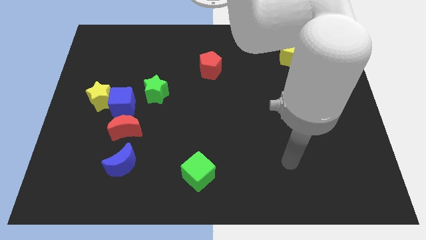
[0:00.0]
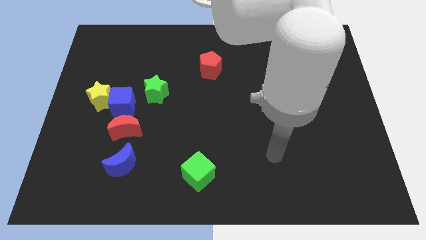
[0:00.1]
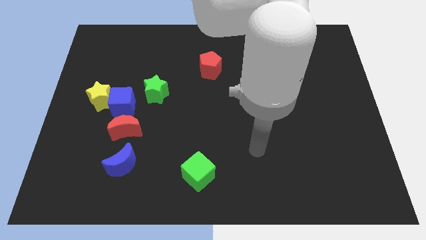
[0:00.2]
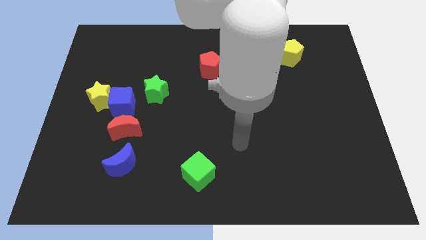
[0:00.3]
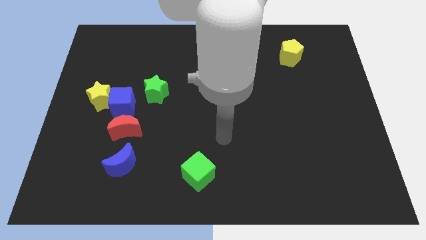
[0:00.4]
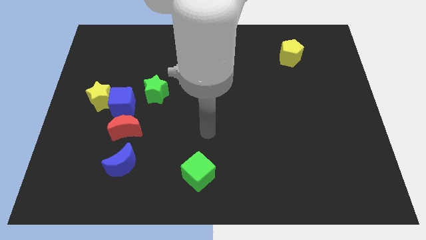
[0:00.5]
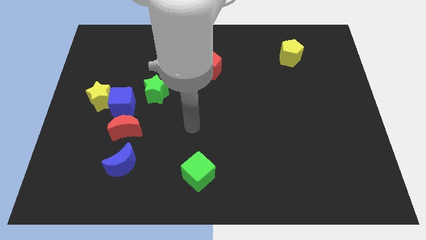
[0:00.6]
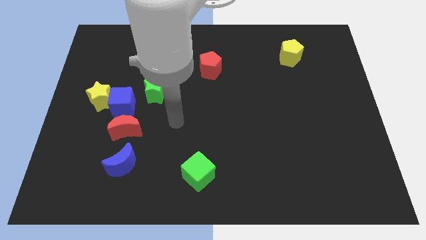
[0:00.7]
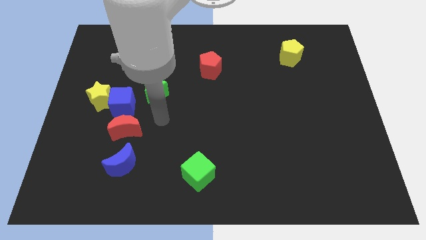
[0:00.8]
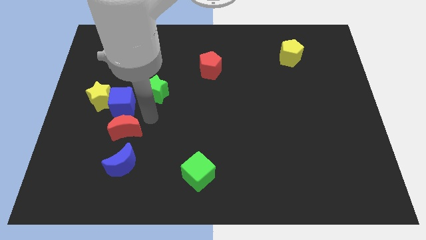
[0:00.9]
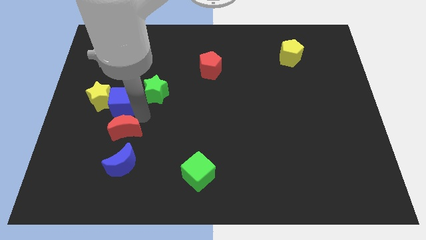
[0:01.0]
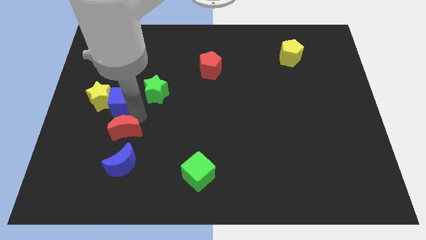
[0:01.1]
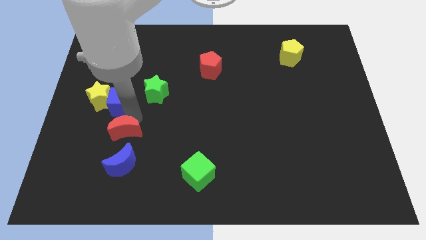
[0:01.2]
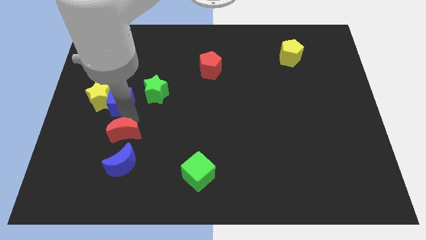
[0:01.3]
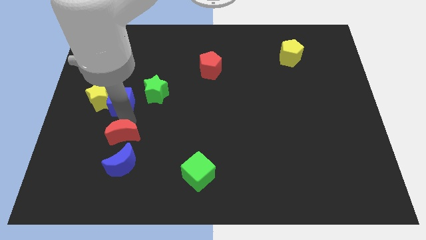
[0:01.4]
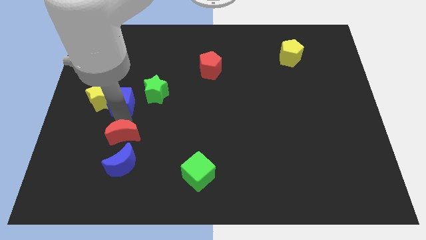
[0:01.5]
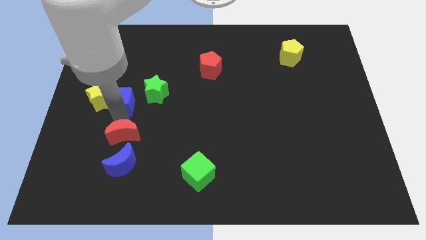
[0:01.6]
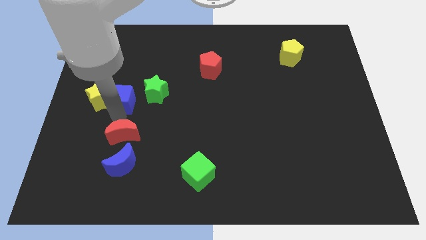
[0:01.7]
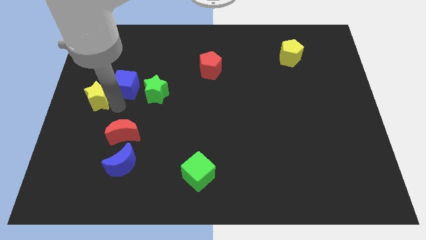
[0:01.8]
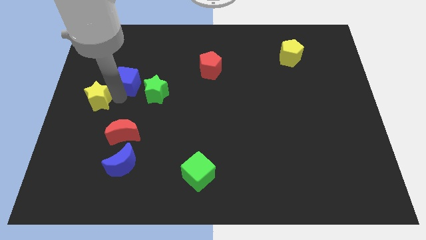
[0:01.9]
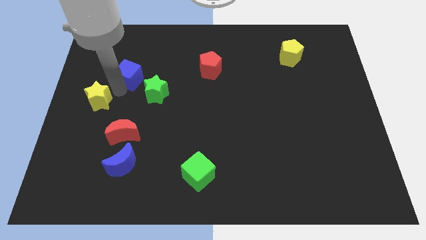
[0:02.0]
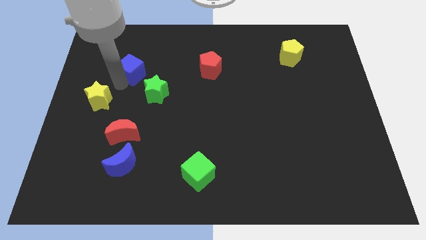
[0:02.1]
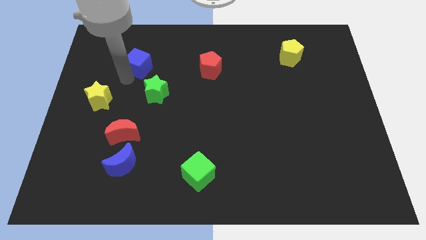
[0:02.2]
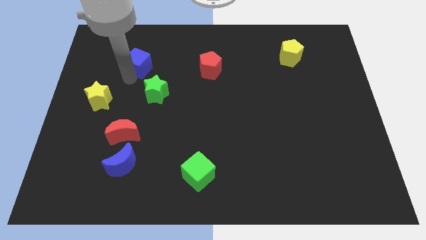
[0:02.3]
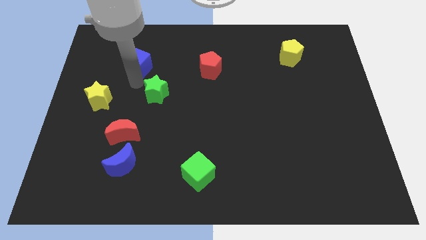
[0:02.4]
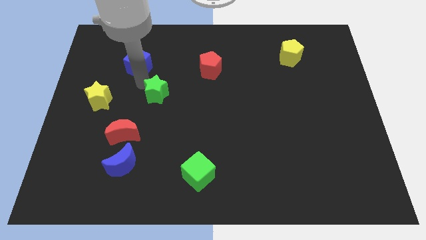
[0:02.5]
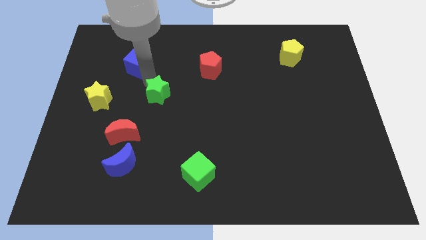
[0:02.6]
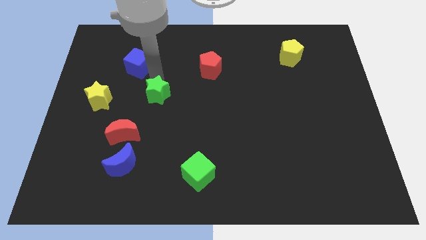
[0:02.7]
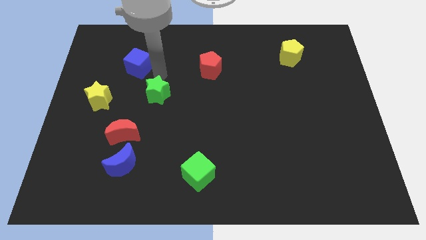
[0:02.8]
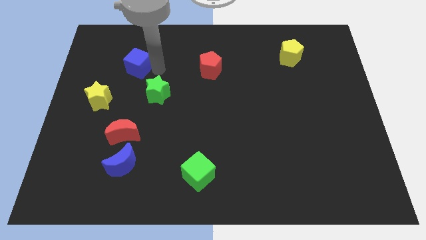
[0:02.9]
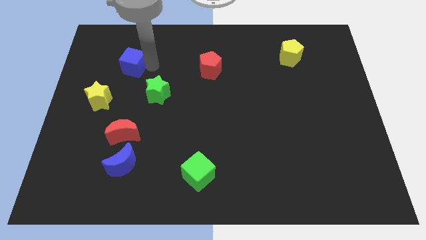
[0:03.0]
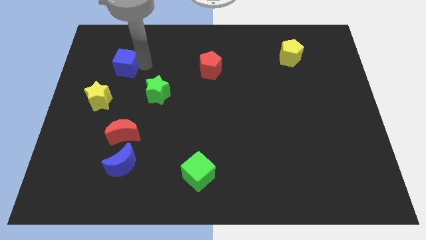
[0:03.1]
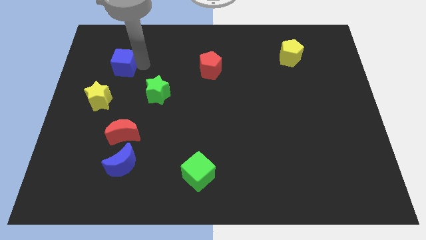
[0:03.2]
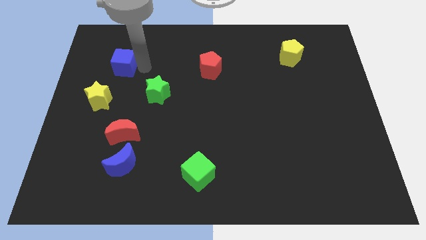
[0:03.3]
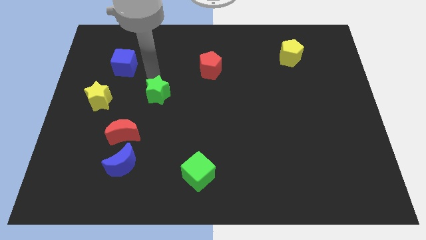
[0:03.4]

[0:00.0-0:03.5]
separate the blue cube from the red moon

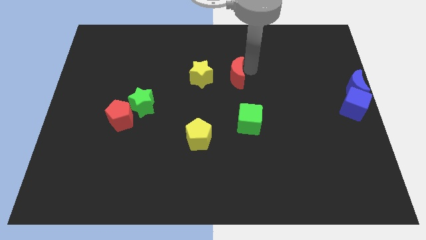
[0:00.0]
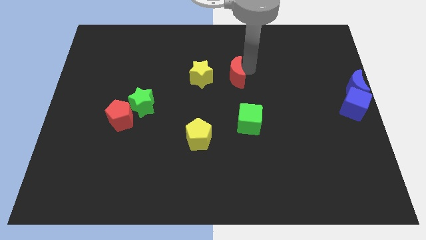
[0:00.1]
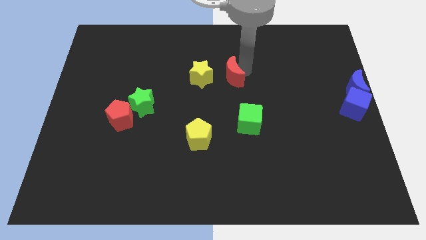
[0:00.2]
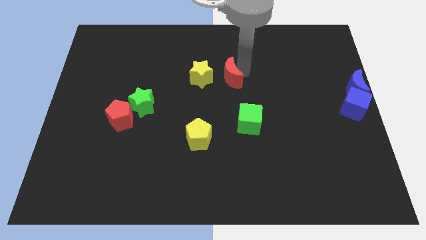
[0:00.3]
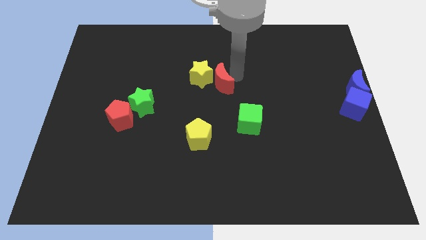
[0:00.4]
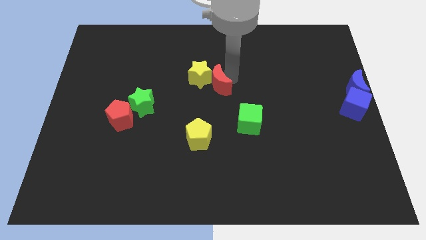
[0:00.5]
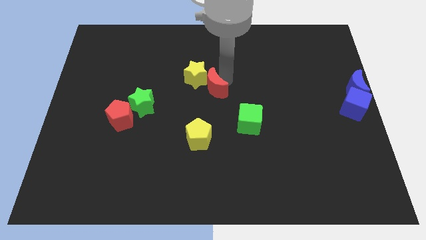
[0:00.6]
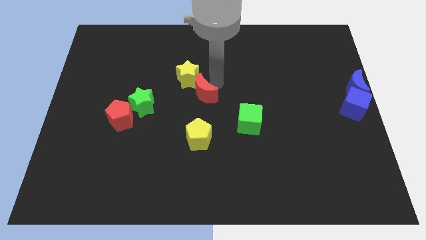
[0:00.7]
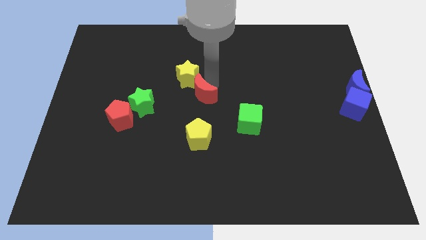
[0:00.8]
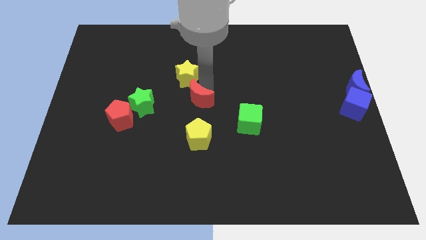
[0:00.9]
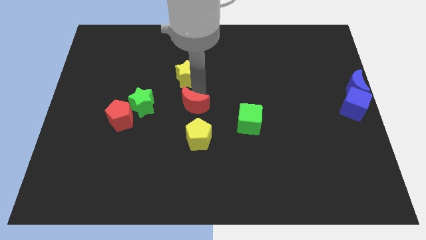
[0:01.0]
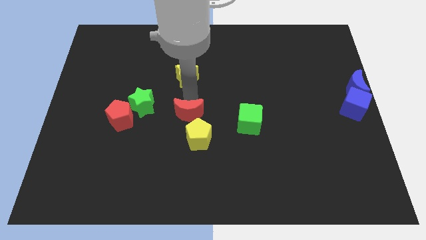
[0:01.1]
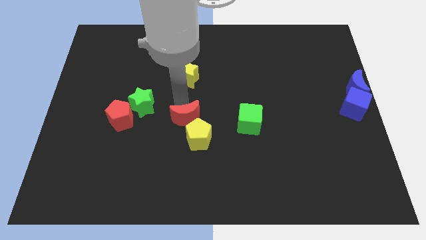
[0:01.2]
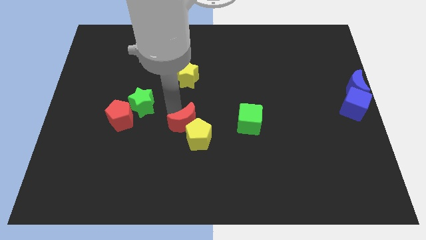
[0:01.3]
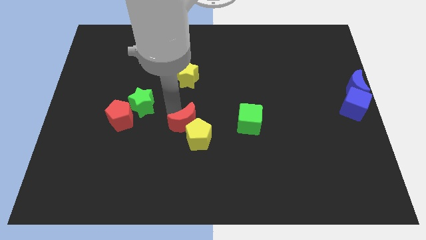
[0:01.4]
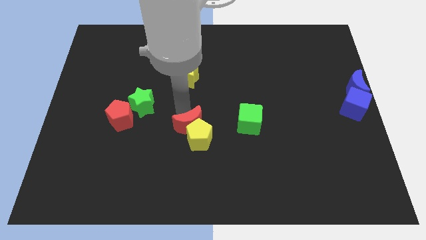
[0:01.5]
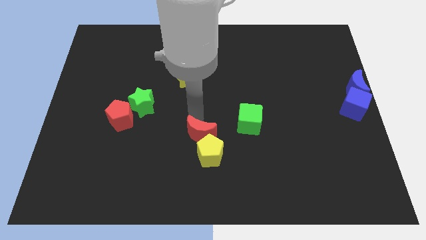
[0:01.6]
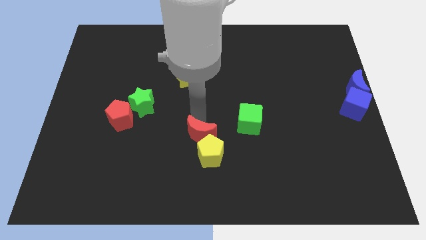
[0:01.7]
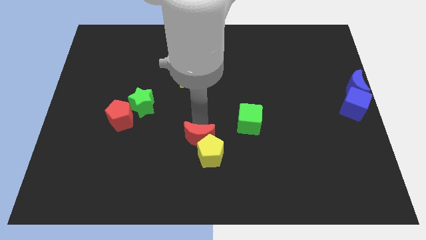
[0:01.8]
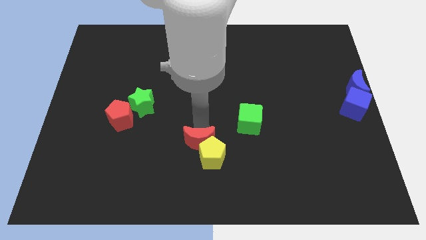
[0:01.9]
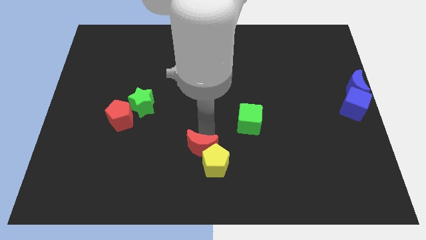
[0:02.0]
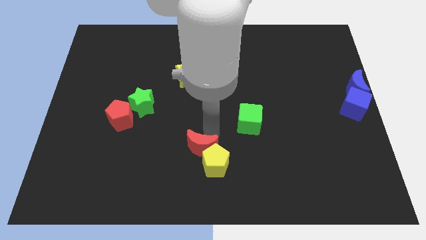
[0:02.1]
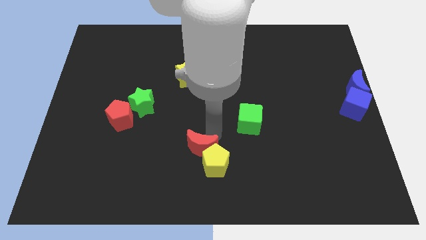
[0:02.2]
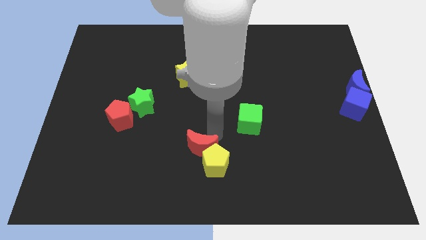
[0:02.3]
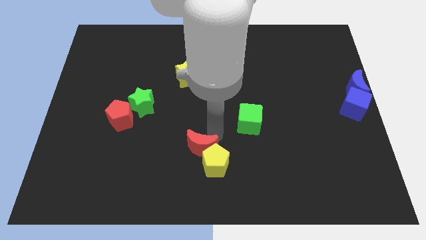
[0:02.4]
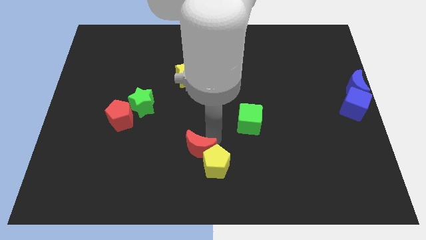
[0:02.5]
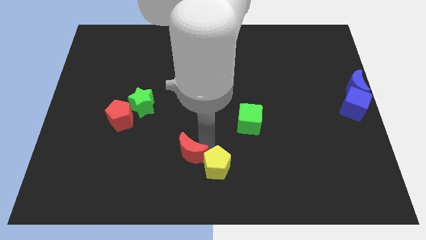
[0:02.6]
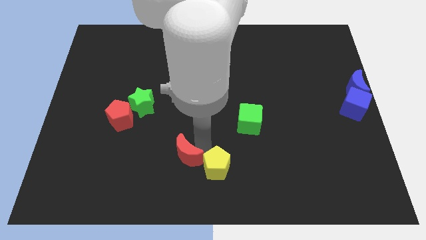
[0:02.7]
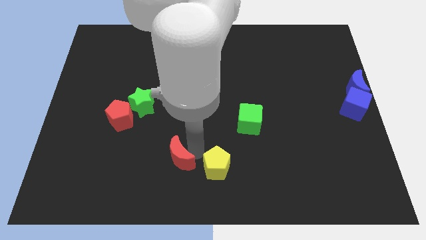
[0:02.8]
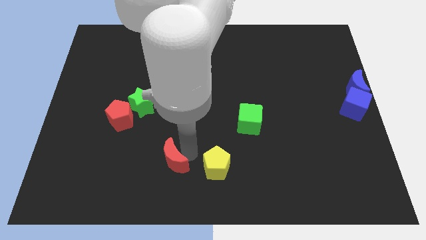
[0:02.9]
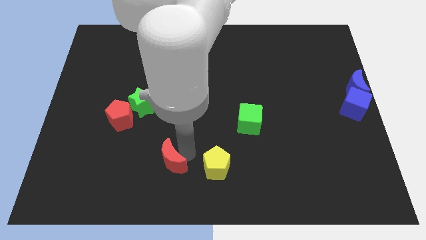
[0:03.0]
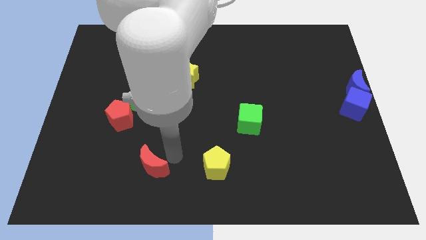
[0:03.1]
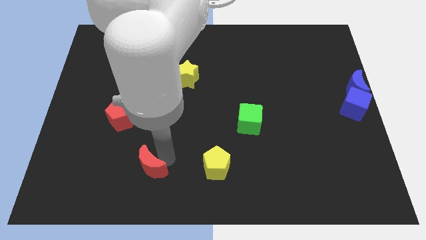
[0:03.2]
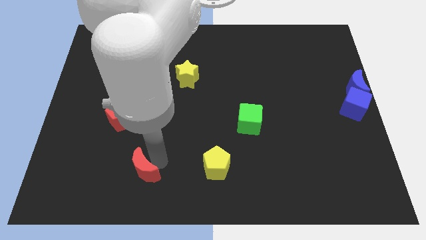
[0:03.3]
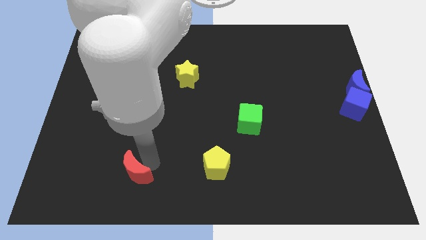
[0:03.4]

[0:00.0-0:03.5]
separate red crescent from yellow pentagon

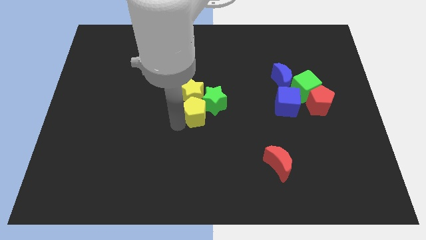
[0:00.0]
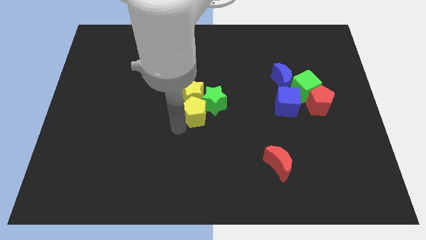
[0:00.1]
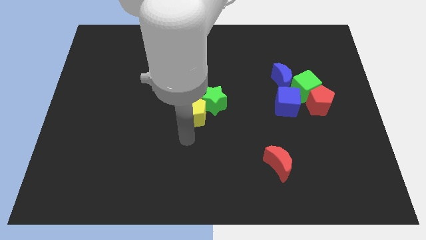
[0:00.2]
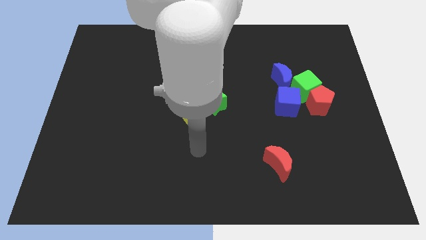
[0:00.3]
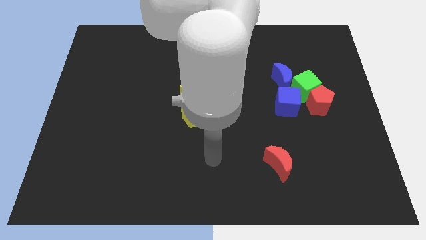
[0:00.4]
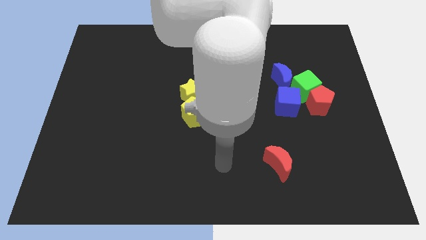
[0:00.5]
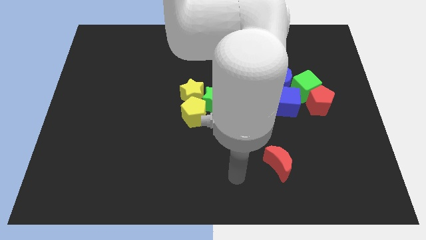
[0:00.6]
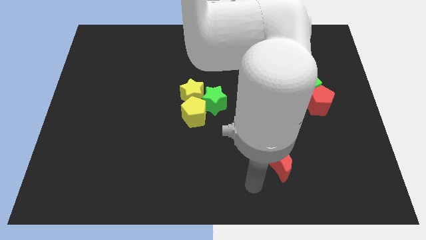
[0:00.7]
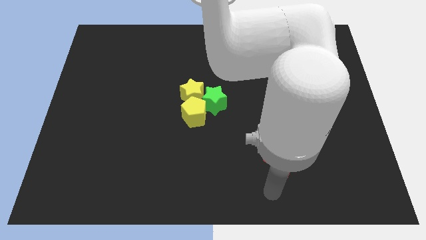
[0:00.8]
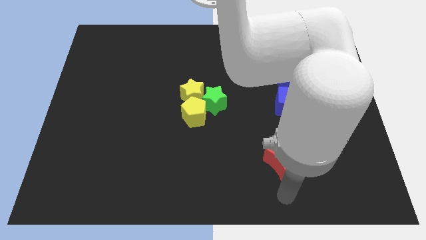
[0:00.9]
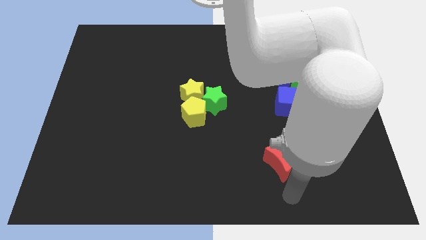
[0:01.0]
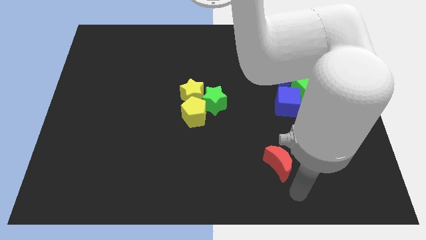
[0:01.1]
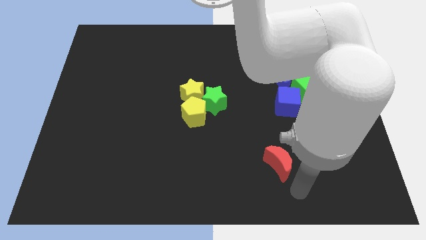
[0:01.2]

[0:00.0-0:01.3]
move your arm at the bottom of the red moon

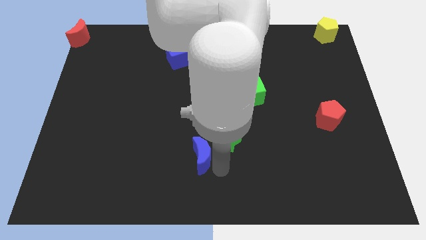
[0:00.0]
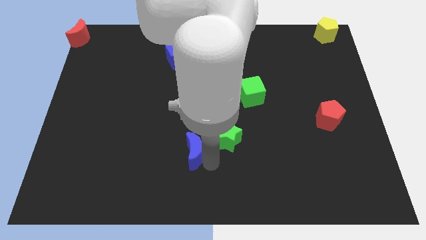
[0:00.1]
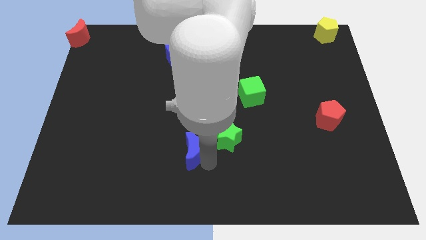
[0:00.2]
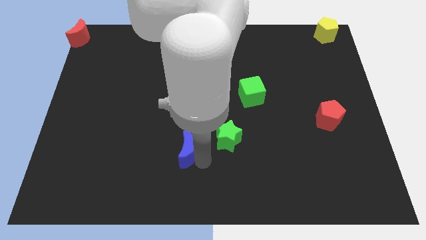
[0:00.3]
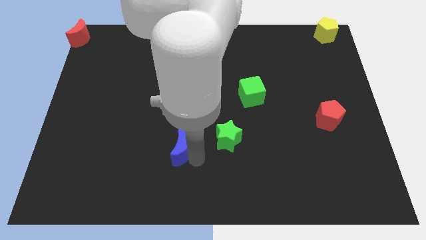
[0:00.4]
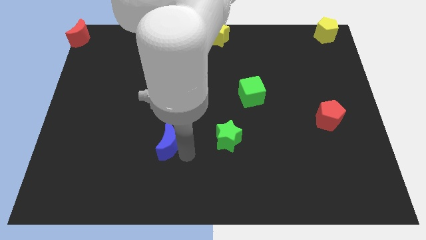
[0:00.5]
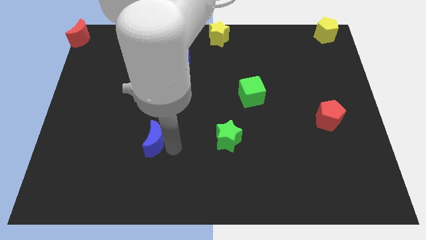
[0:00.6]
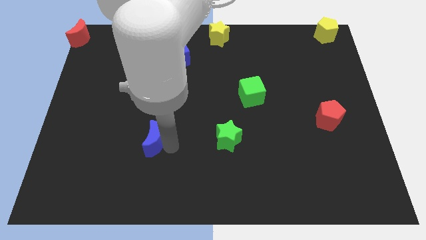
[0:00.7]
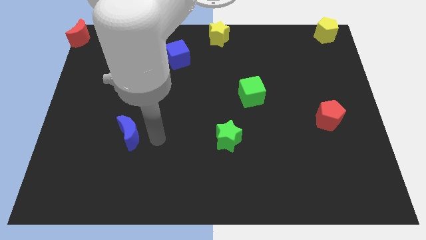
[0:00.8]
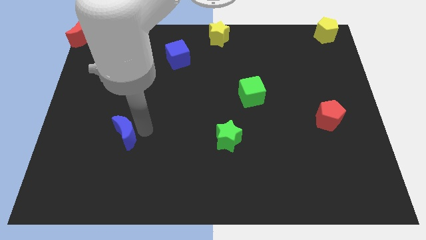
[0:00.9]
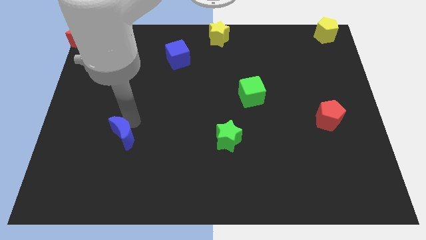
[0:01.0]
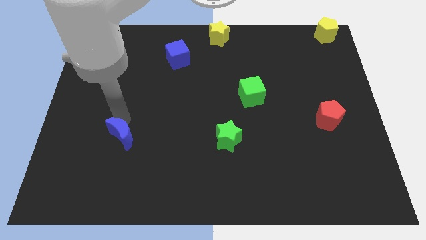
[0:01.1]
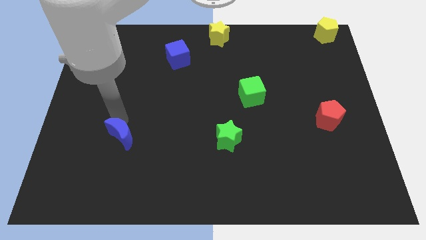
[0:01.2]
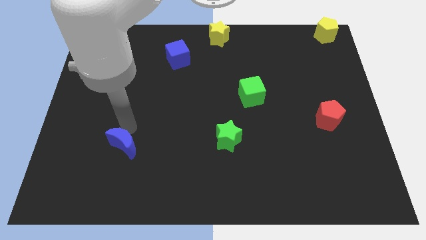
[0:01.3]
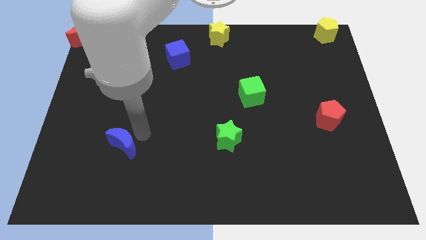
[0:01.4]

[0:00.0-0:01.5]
push the blue moon to the left side
